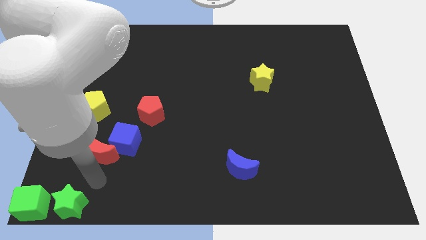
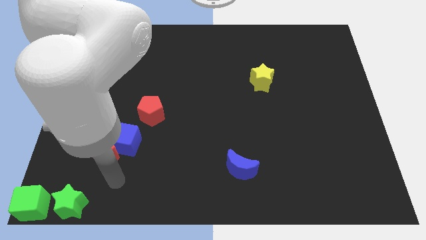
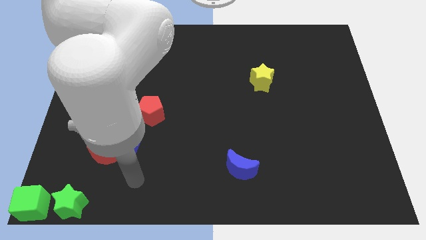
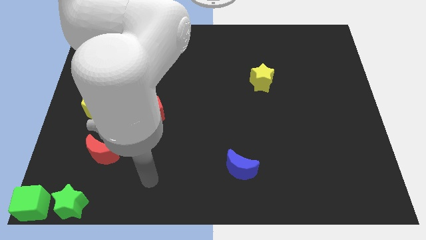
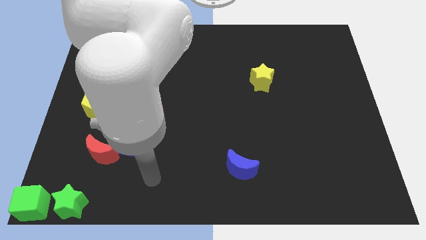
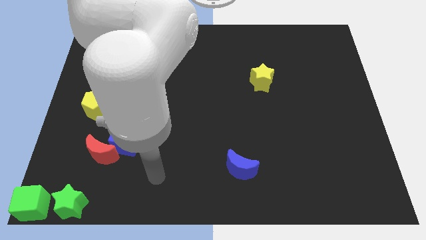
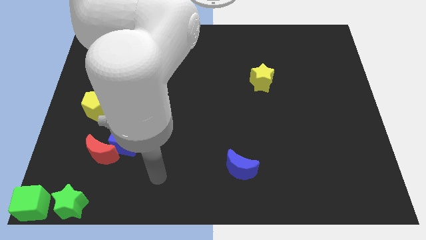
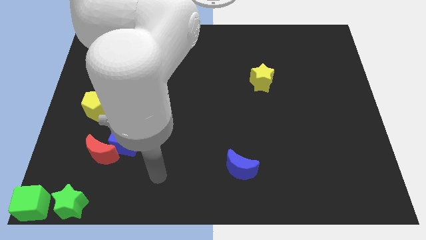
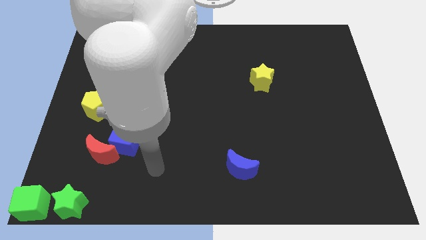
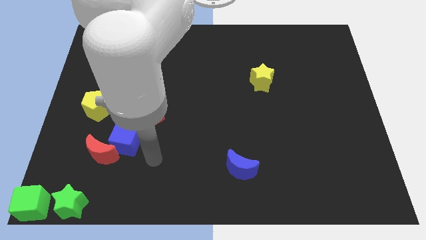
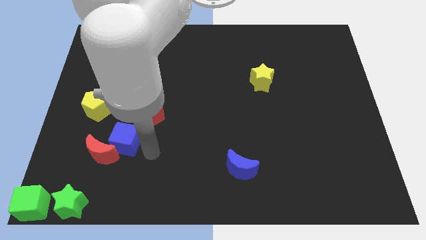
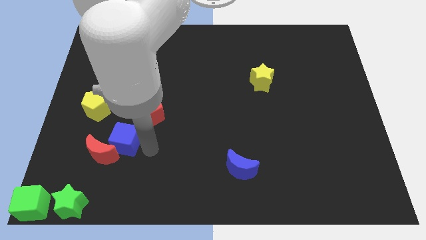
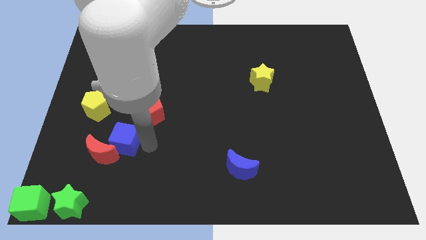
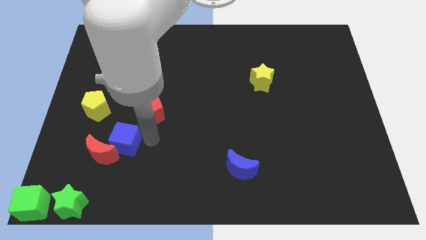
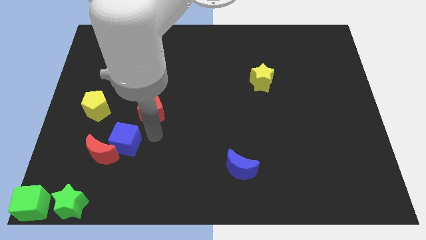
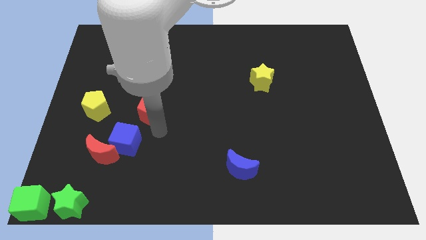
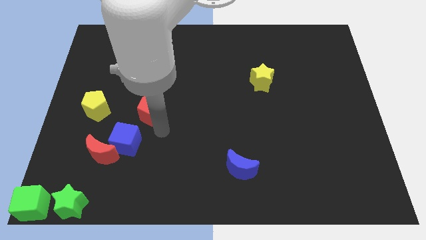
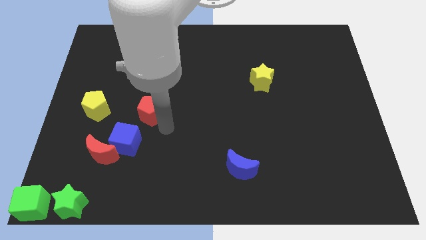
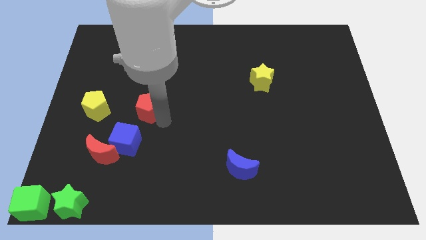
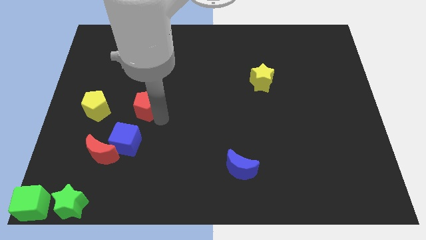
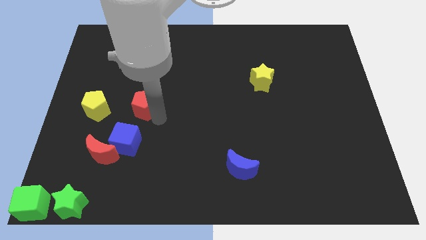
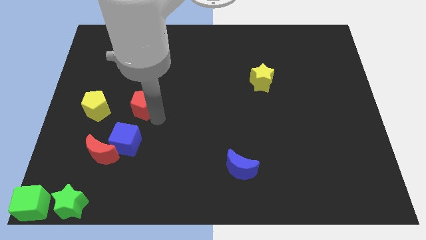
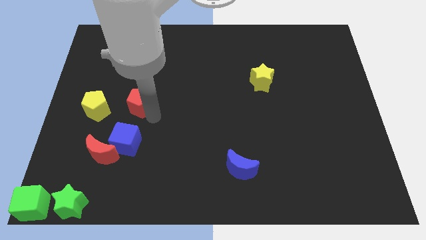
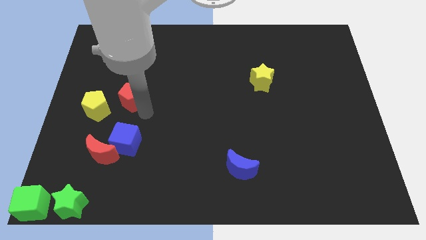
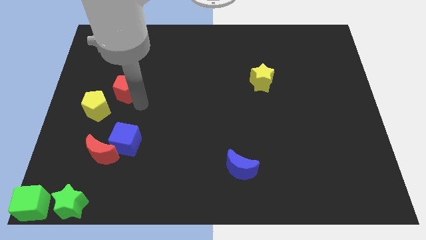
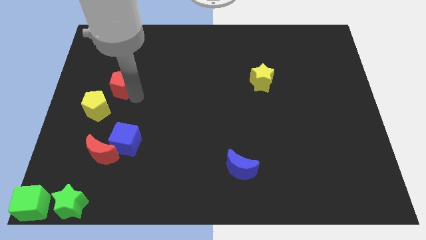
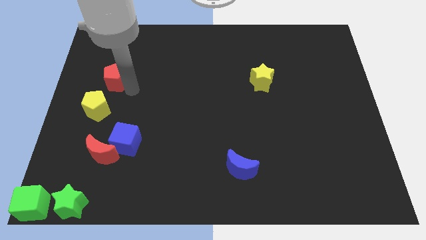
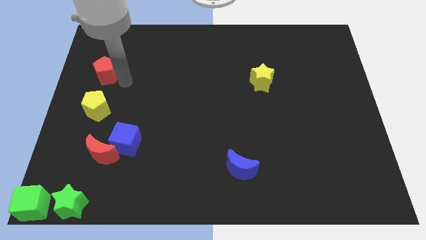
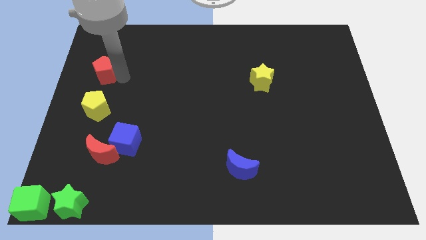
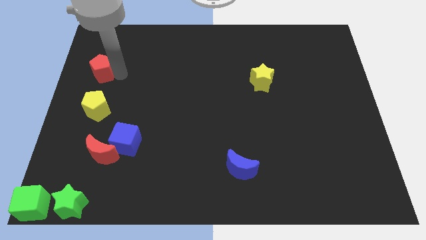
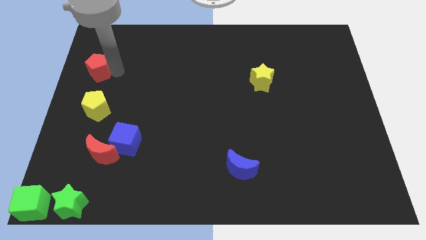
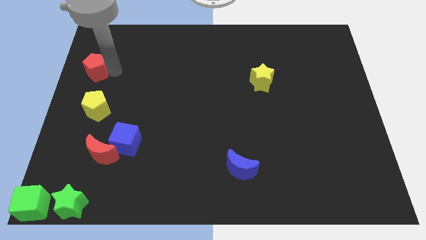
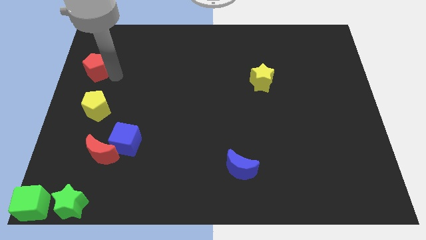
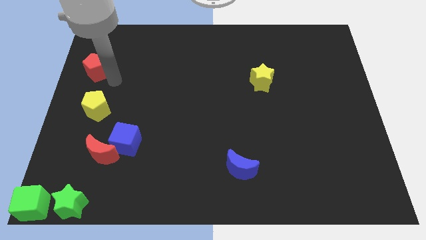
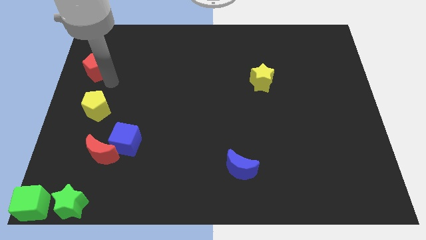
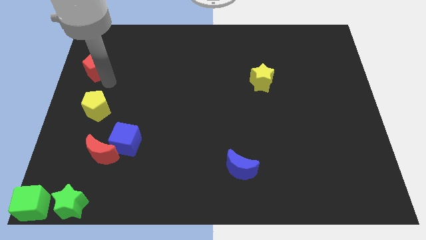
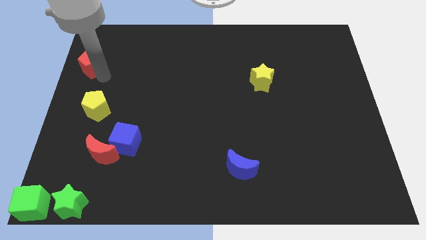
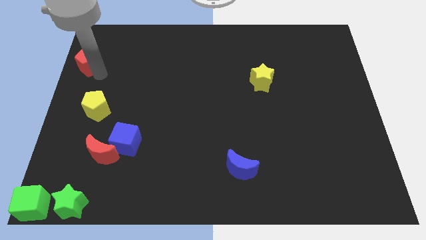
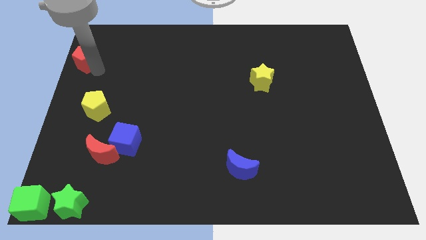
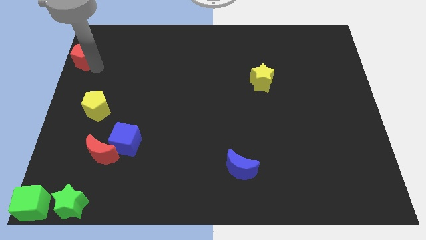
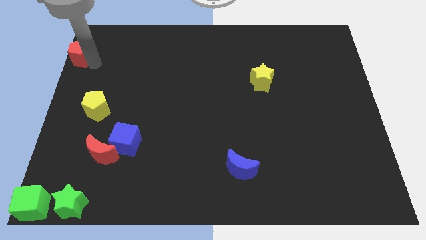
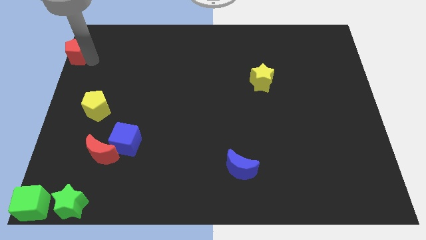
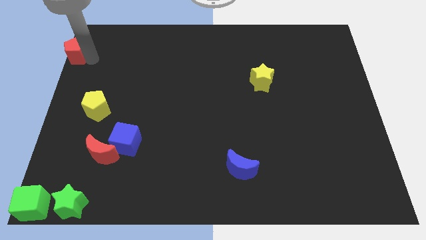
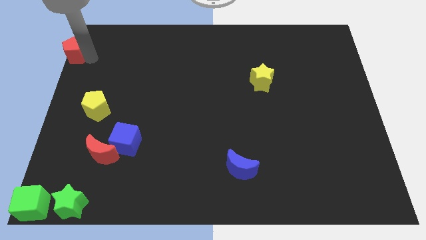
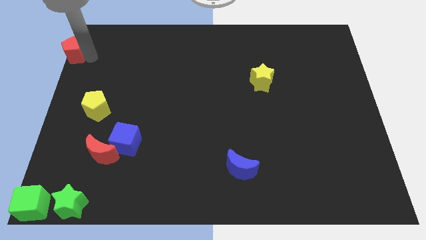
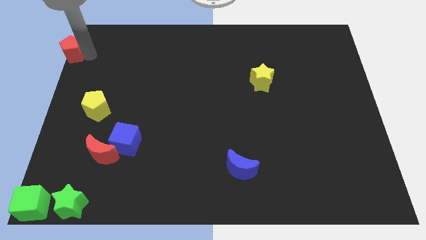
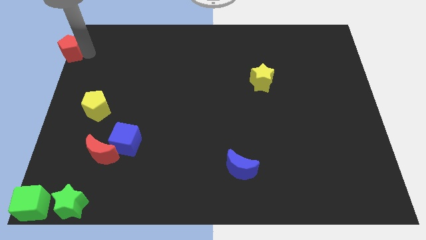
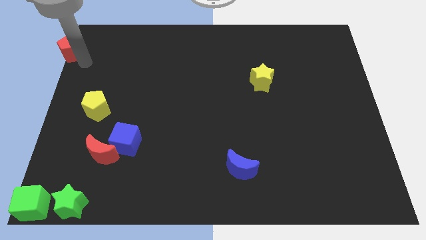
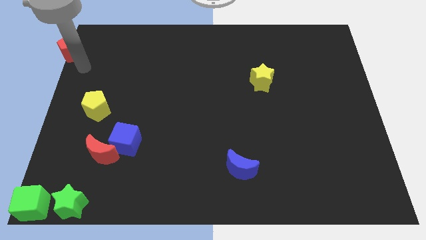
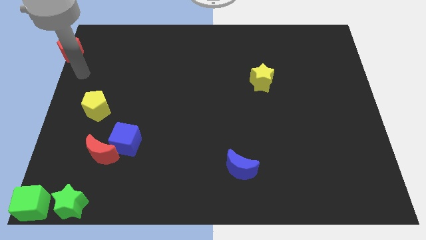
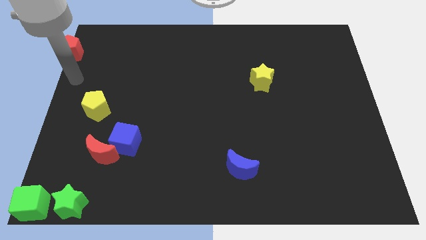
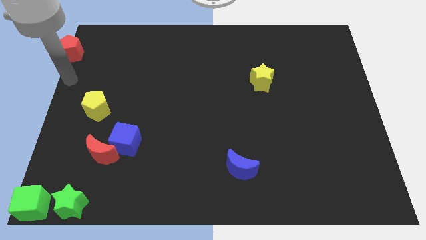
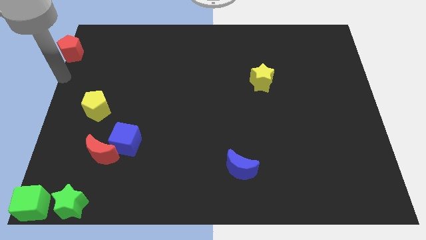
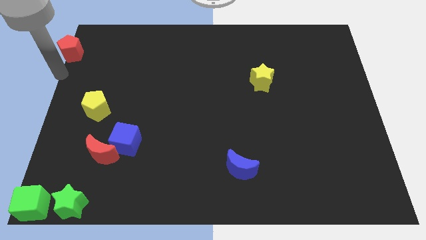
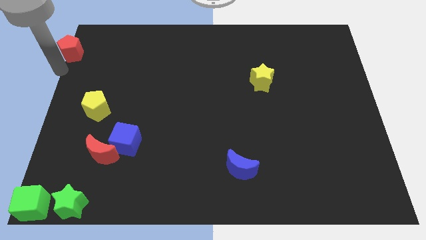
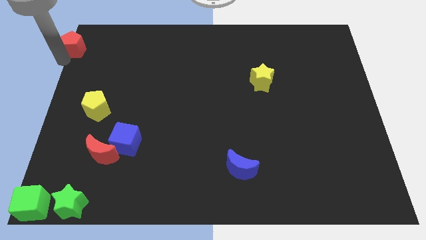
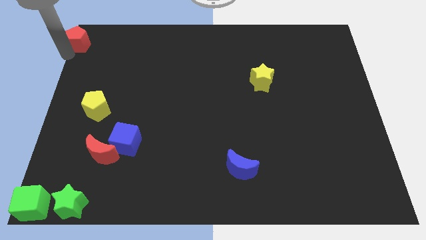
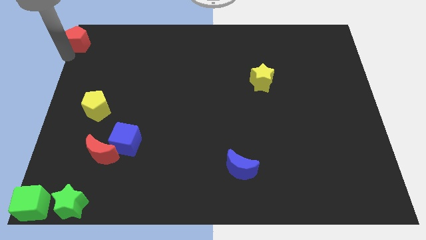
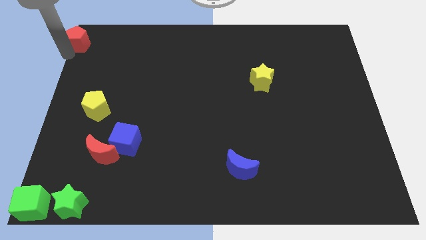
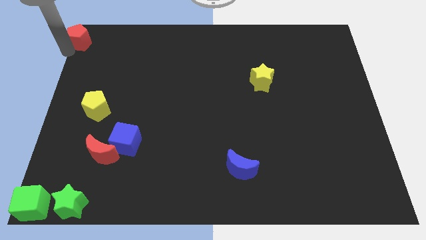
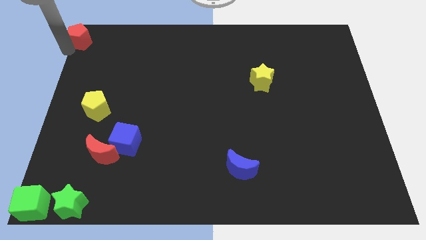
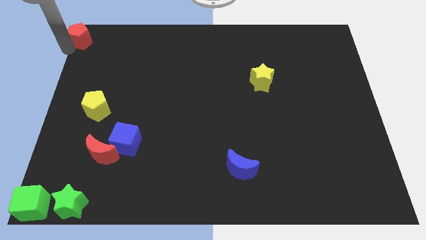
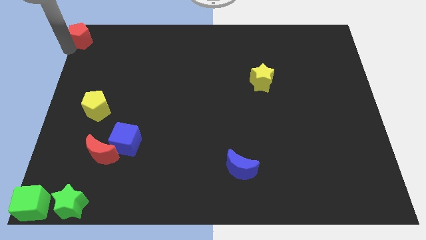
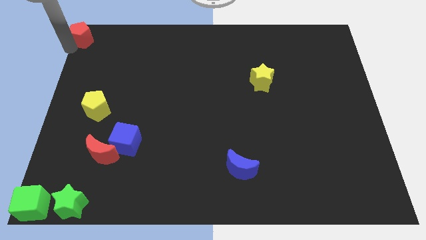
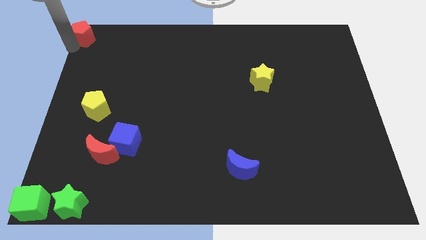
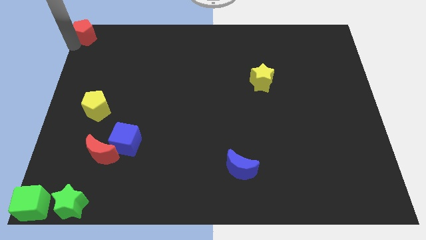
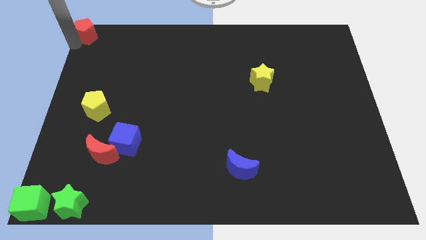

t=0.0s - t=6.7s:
push the red pentagon to the top right corner

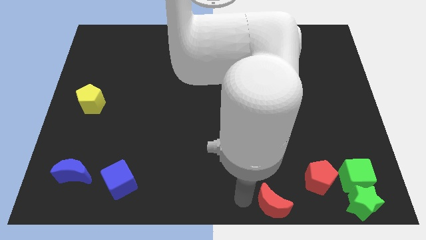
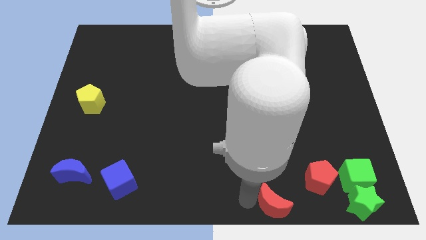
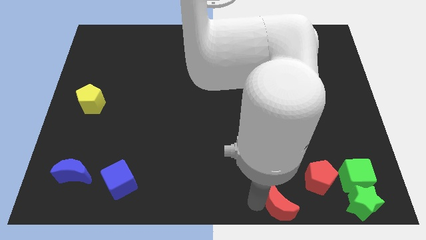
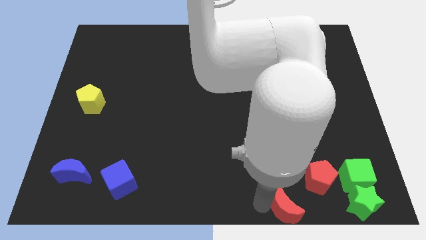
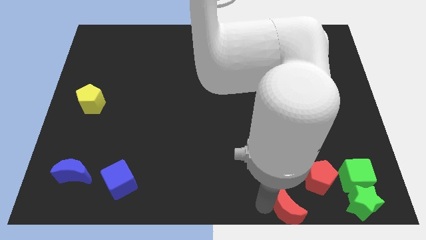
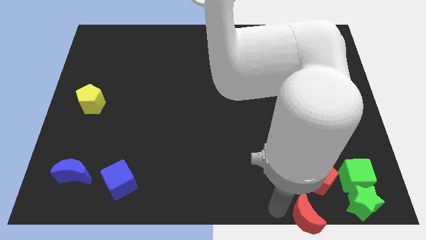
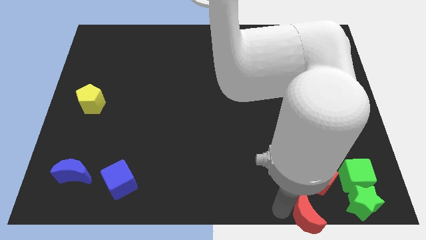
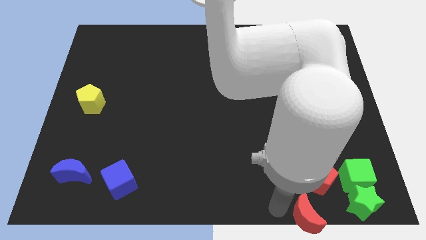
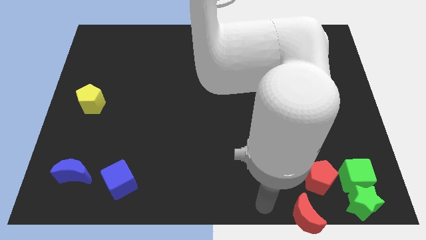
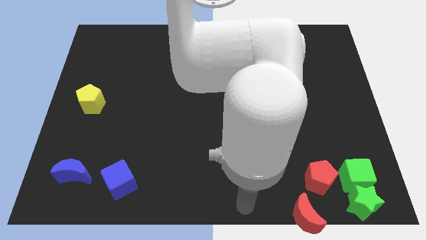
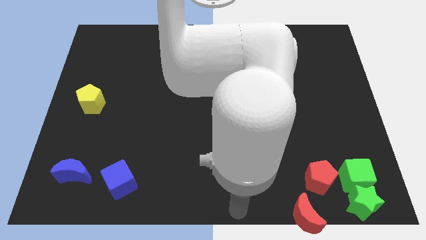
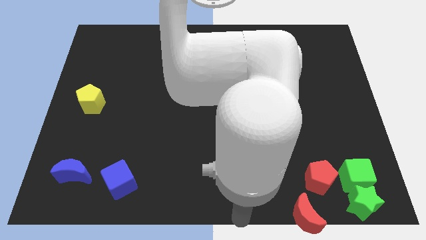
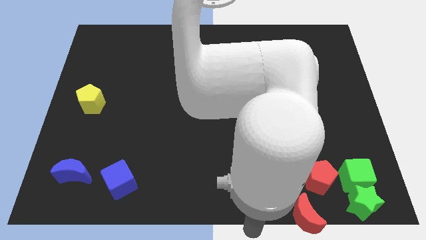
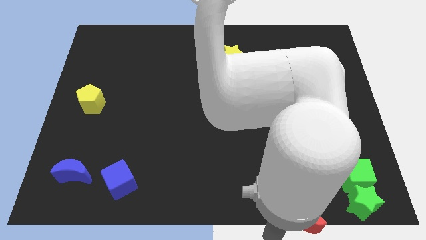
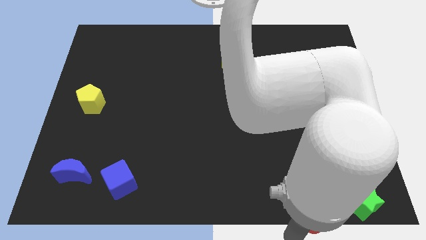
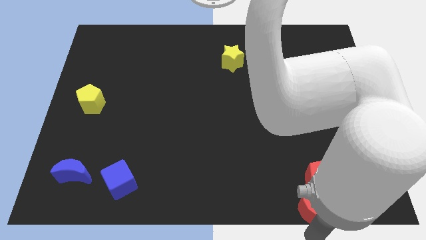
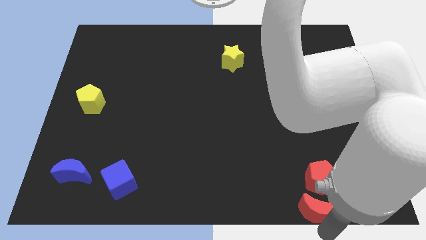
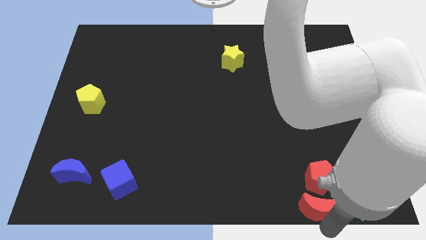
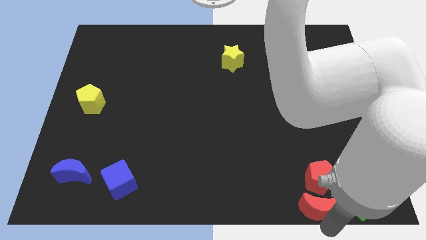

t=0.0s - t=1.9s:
place the red crescent below the red pentagon

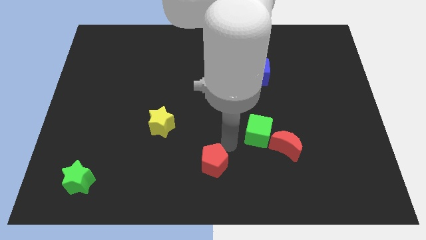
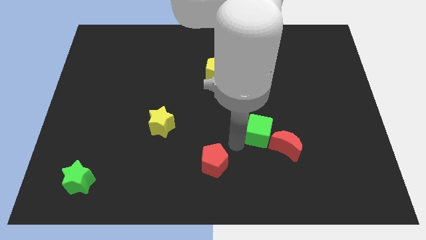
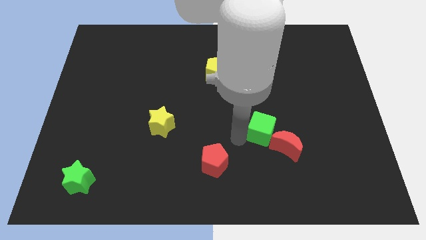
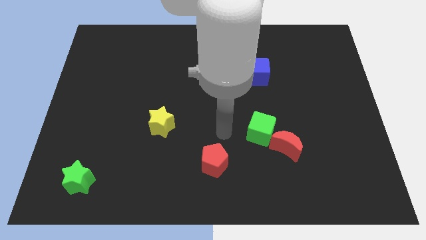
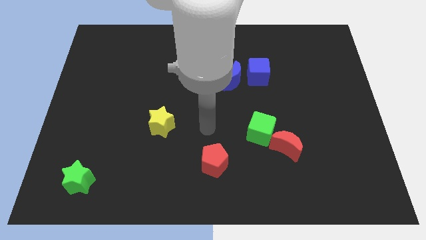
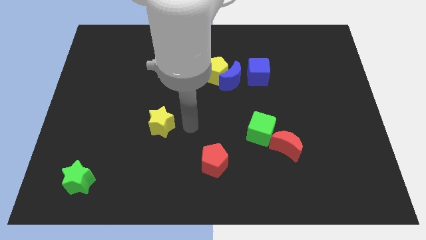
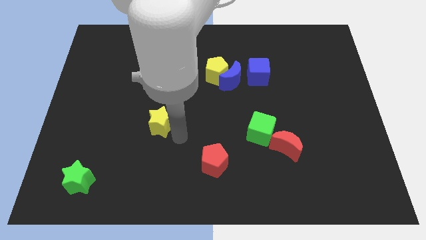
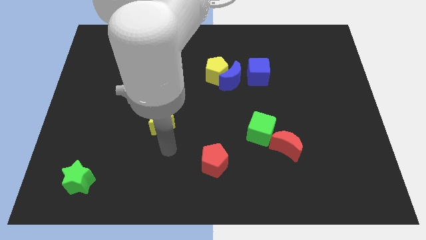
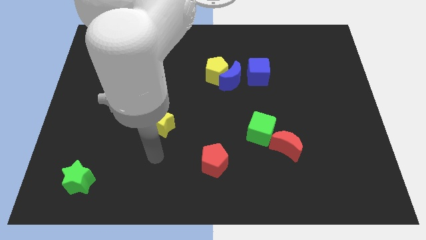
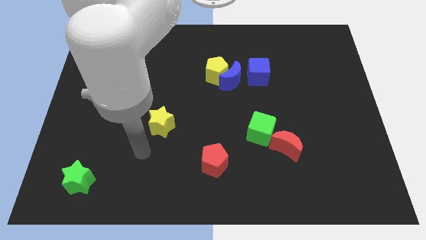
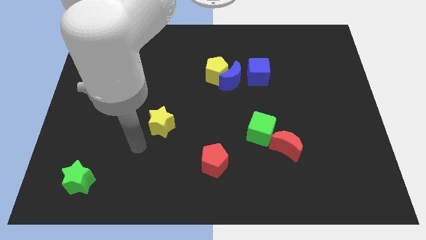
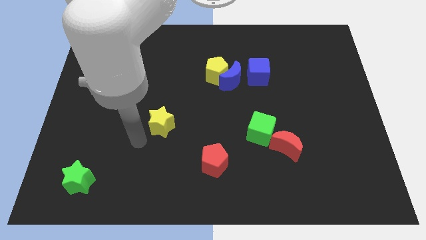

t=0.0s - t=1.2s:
take your arm to the yellow star
